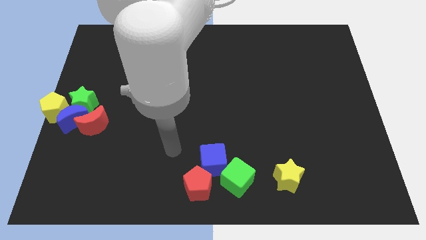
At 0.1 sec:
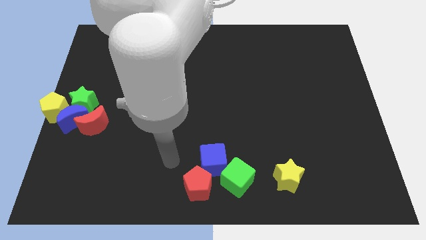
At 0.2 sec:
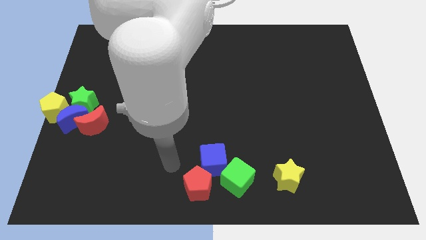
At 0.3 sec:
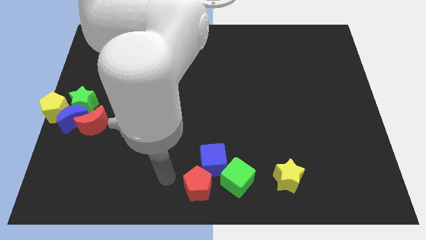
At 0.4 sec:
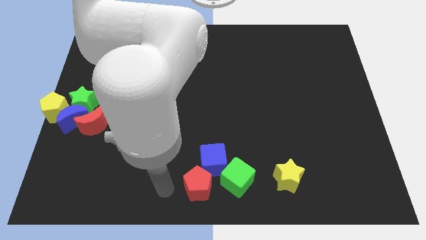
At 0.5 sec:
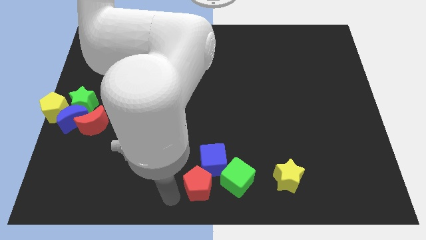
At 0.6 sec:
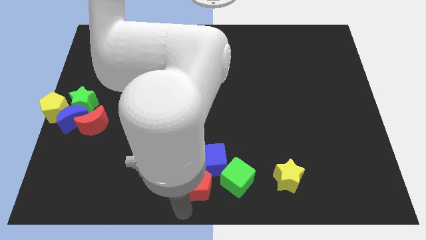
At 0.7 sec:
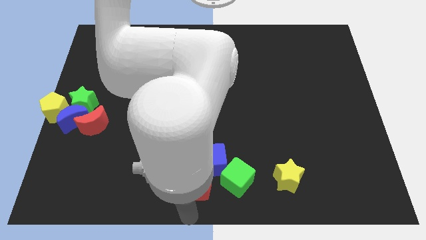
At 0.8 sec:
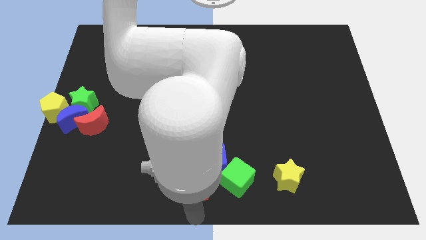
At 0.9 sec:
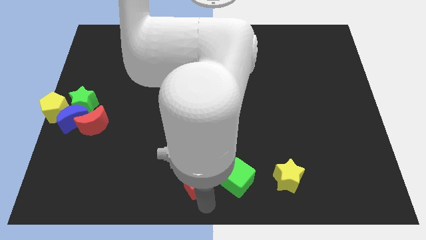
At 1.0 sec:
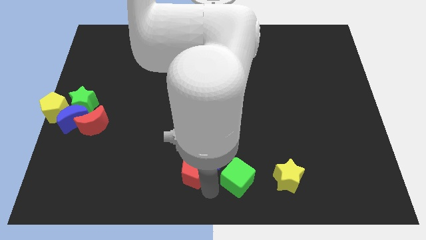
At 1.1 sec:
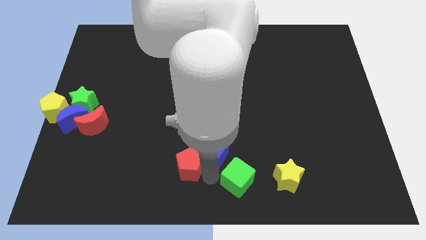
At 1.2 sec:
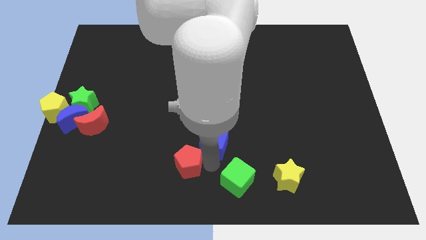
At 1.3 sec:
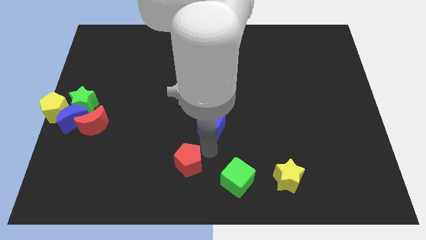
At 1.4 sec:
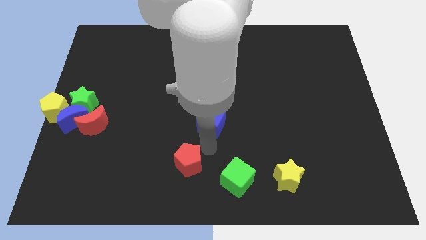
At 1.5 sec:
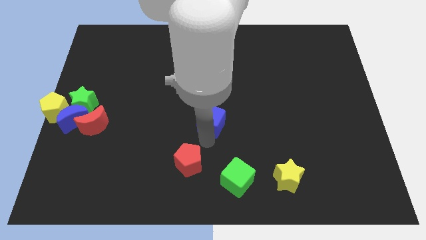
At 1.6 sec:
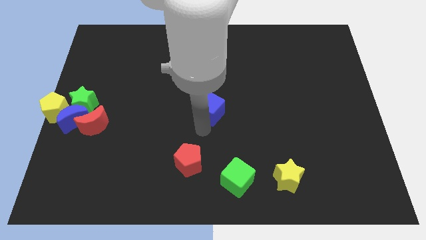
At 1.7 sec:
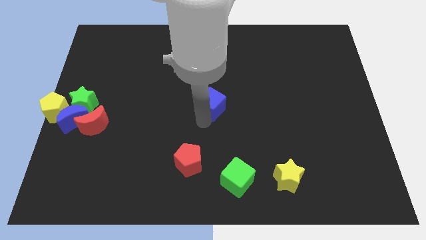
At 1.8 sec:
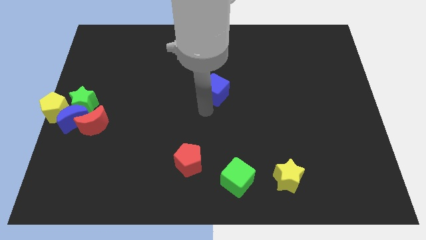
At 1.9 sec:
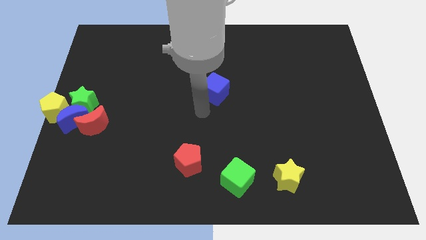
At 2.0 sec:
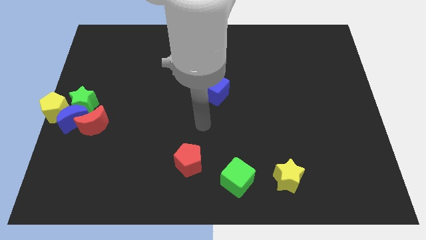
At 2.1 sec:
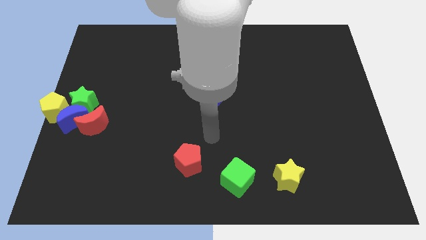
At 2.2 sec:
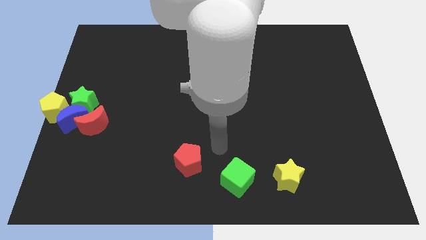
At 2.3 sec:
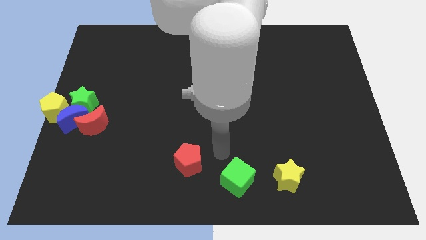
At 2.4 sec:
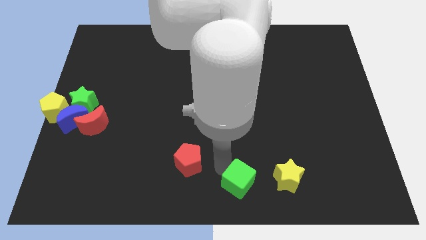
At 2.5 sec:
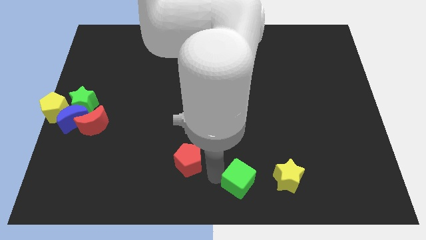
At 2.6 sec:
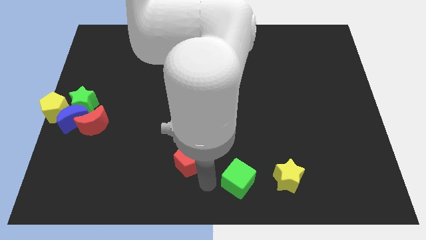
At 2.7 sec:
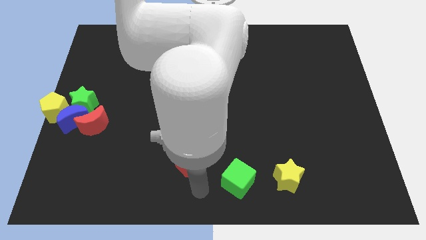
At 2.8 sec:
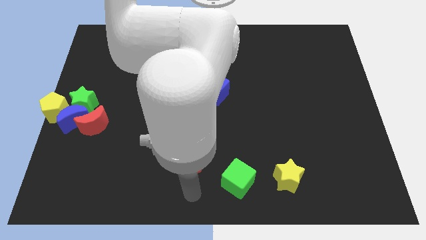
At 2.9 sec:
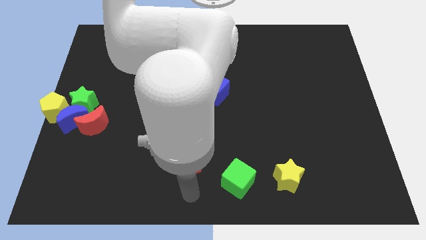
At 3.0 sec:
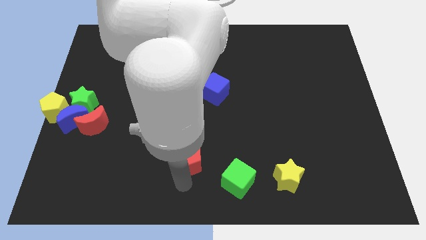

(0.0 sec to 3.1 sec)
place blue cube at the center of the board

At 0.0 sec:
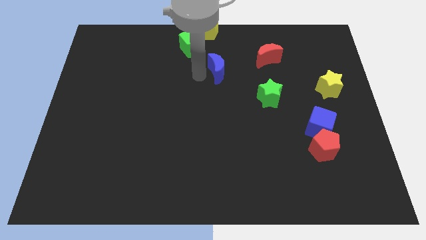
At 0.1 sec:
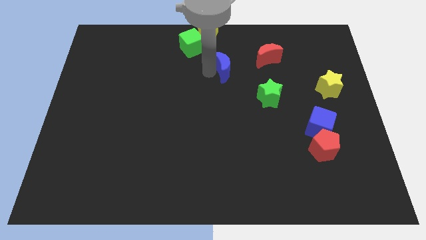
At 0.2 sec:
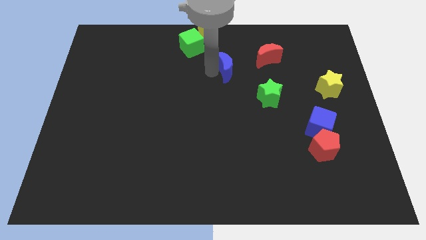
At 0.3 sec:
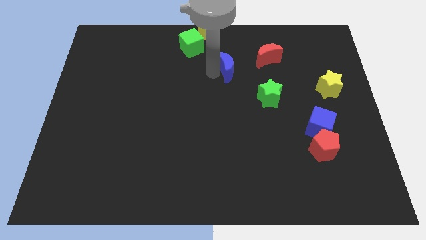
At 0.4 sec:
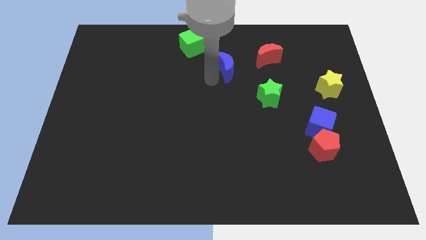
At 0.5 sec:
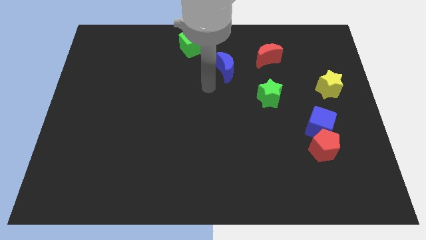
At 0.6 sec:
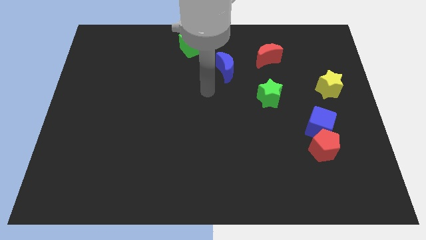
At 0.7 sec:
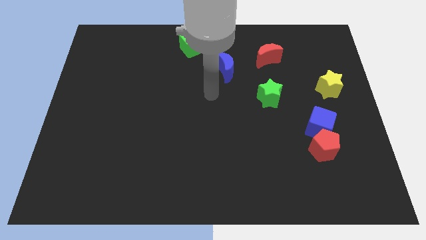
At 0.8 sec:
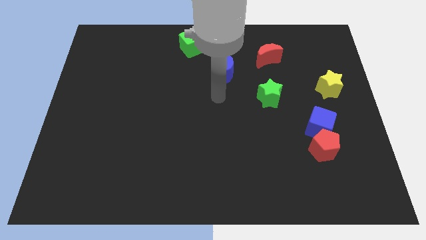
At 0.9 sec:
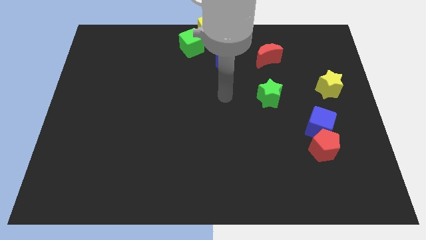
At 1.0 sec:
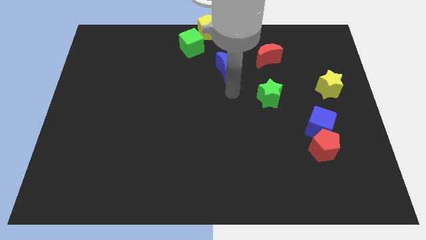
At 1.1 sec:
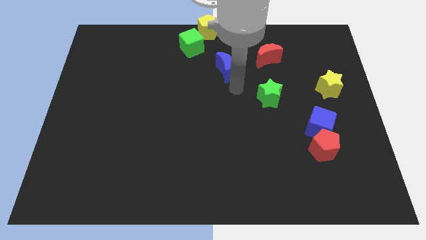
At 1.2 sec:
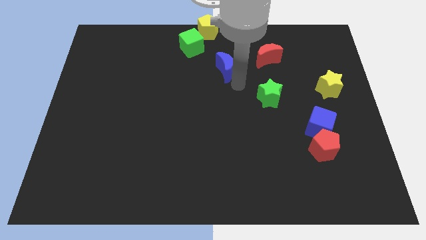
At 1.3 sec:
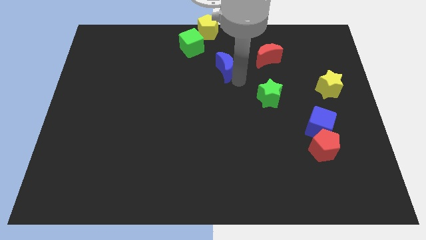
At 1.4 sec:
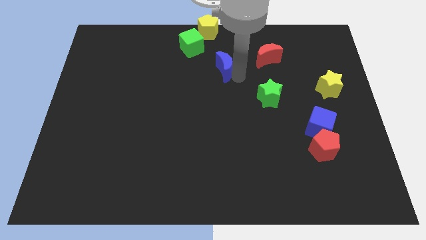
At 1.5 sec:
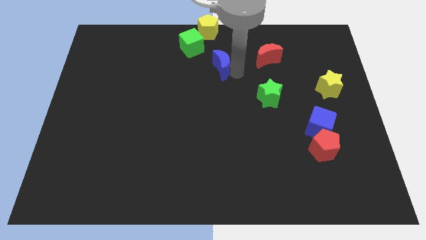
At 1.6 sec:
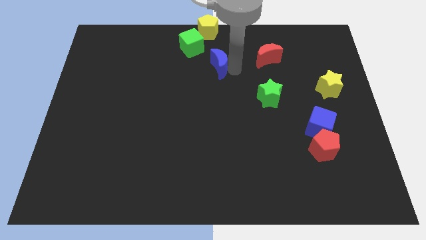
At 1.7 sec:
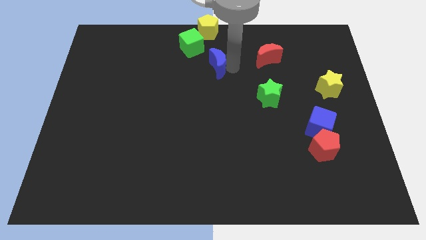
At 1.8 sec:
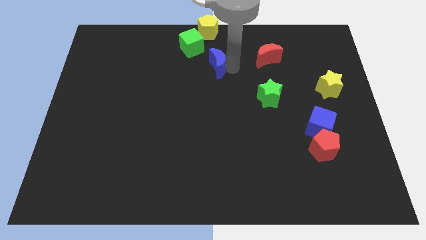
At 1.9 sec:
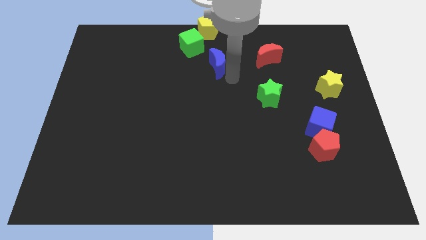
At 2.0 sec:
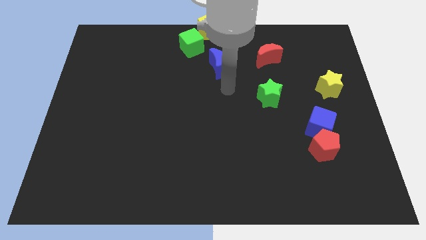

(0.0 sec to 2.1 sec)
move the blue crescent near to the bottom right side of the green cube

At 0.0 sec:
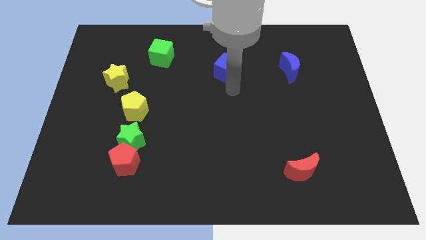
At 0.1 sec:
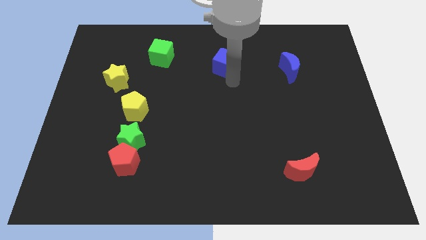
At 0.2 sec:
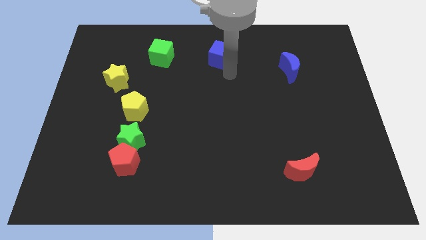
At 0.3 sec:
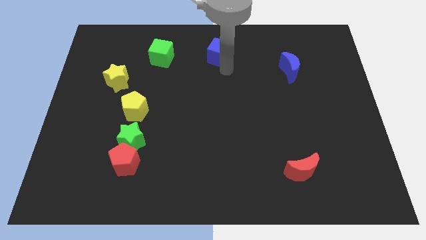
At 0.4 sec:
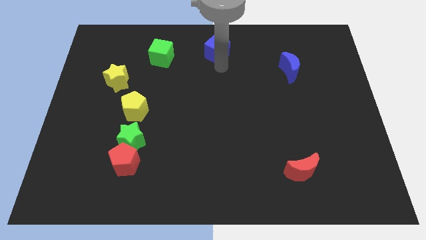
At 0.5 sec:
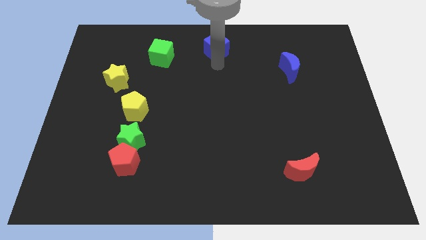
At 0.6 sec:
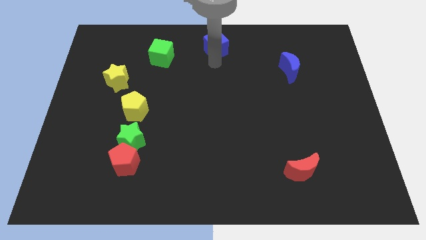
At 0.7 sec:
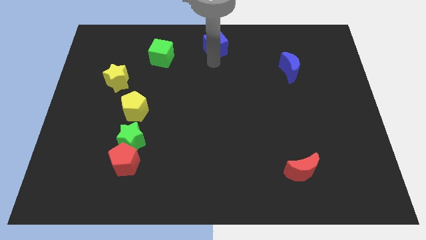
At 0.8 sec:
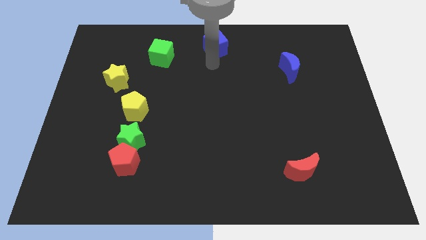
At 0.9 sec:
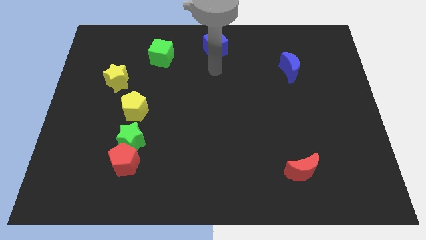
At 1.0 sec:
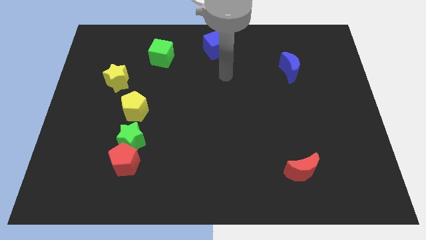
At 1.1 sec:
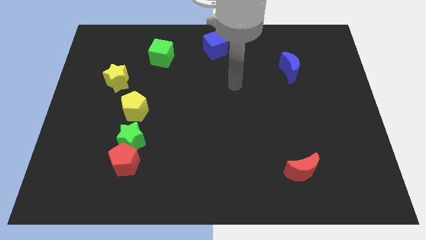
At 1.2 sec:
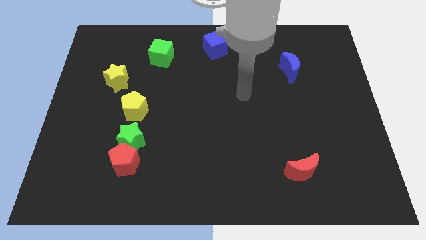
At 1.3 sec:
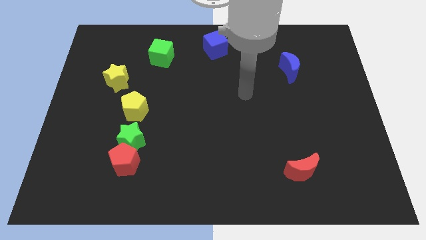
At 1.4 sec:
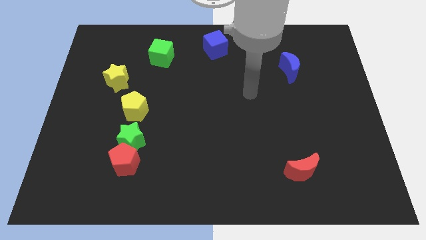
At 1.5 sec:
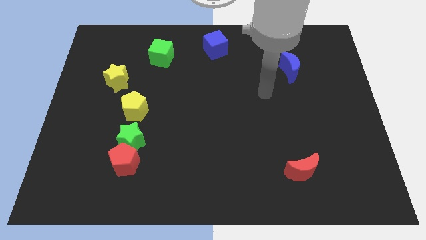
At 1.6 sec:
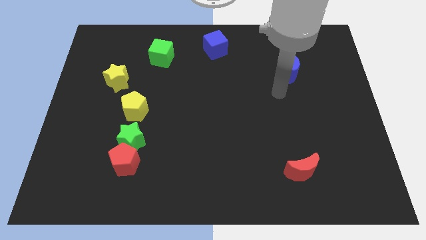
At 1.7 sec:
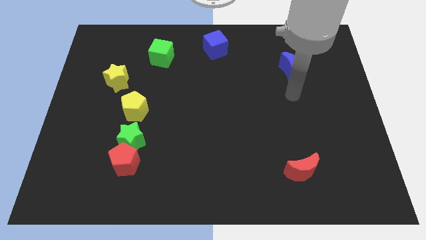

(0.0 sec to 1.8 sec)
push blue cube towards top middle of the board

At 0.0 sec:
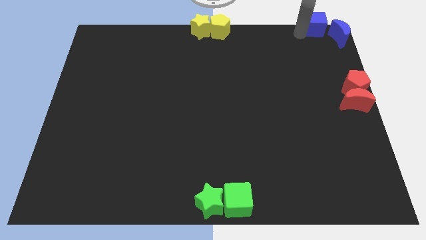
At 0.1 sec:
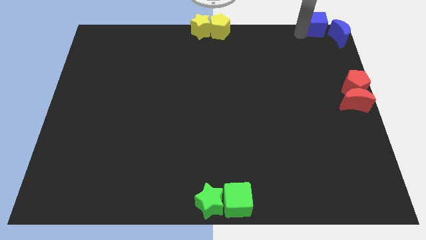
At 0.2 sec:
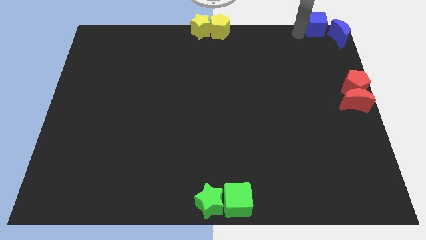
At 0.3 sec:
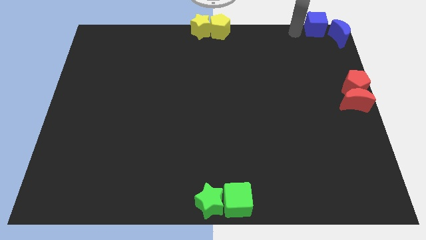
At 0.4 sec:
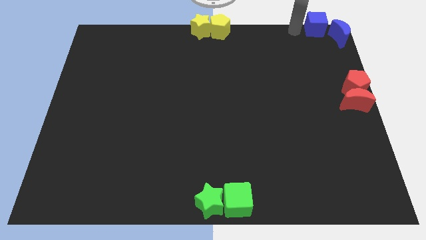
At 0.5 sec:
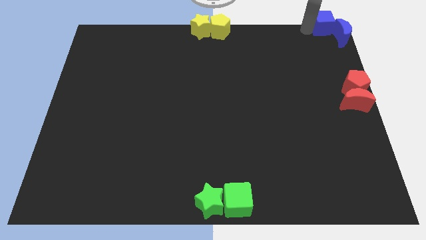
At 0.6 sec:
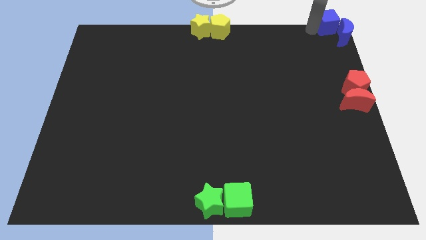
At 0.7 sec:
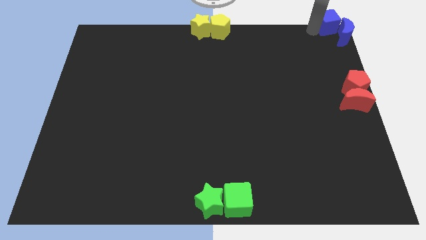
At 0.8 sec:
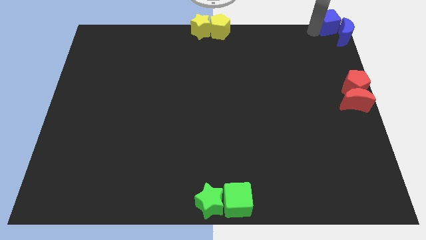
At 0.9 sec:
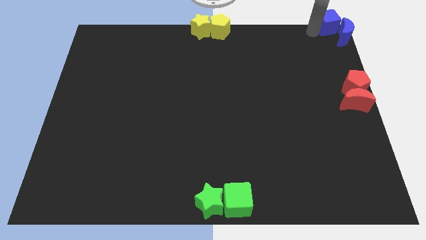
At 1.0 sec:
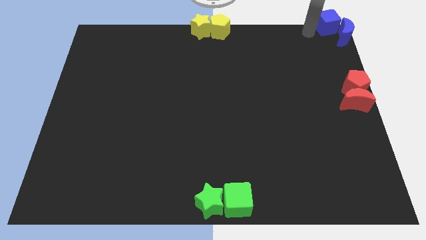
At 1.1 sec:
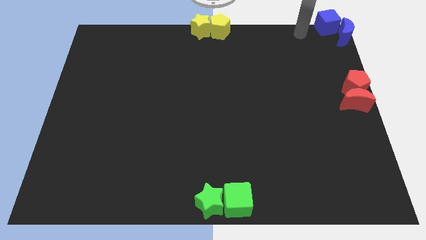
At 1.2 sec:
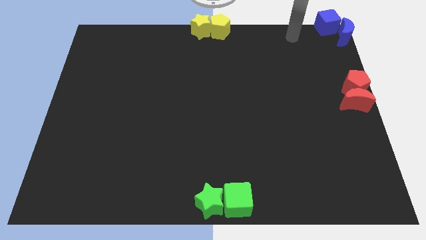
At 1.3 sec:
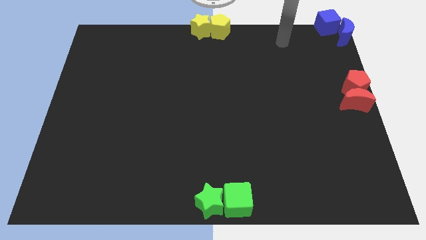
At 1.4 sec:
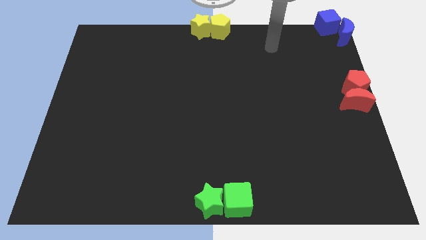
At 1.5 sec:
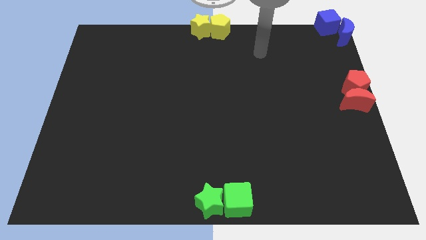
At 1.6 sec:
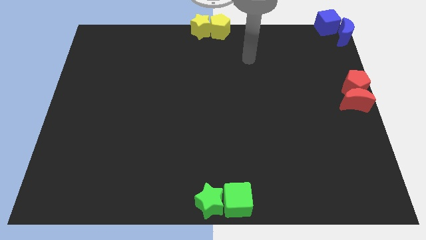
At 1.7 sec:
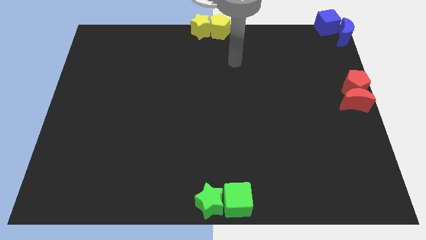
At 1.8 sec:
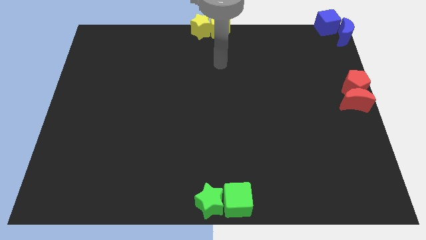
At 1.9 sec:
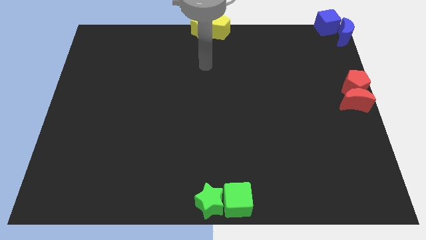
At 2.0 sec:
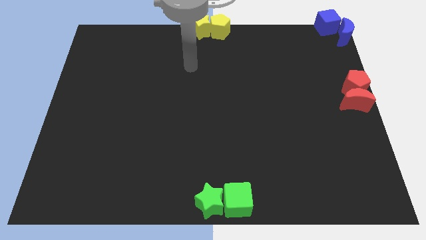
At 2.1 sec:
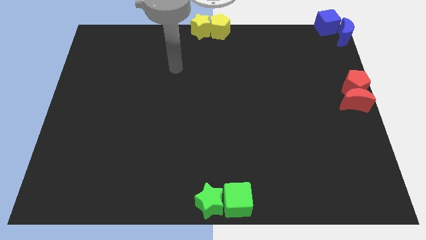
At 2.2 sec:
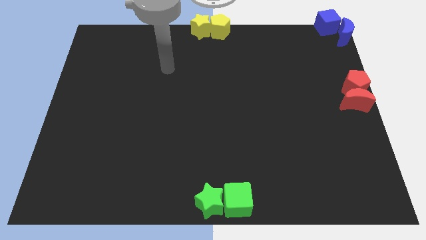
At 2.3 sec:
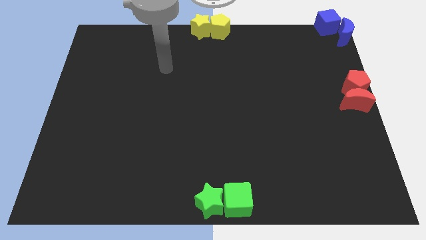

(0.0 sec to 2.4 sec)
put blue blocks together at the top right corner of the board
